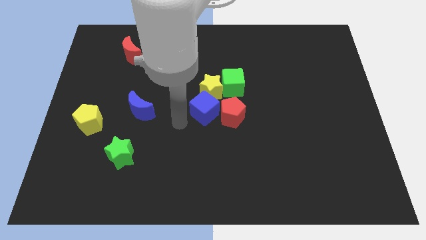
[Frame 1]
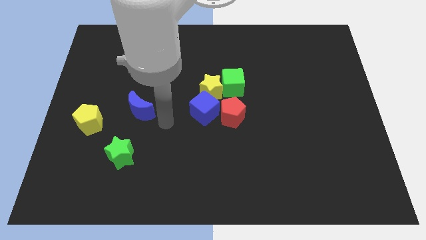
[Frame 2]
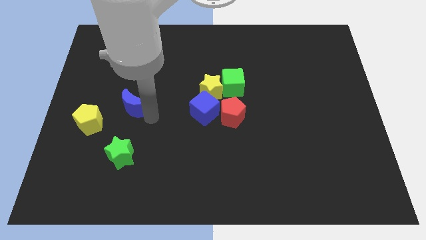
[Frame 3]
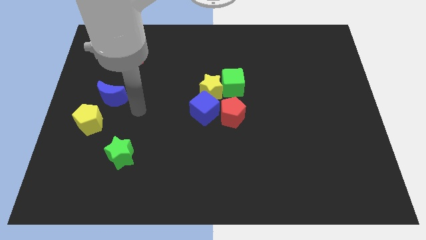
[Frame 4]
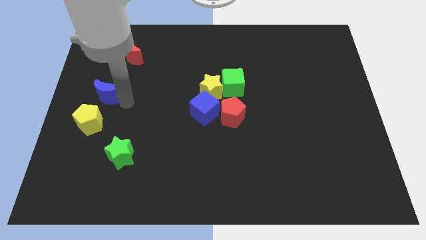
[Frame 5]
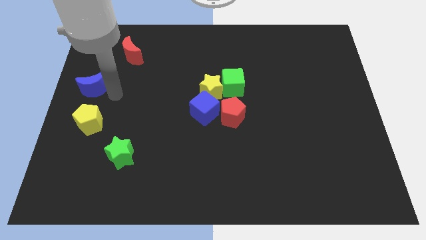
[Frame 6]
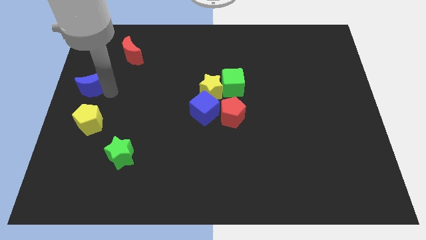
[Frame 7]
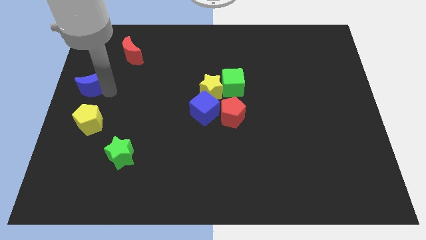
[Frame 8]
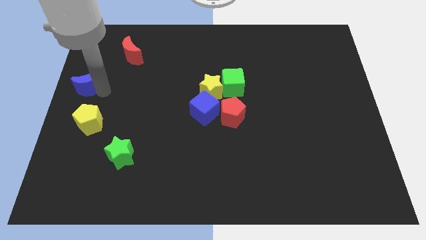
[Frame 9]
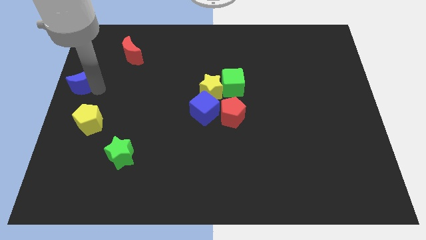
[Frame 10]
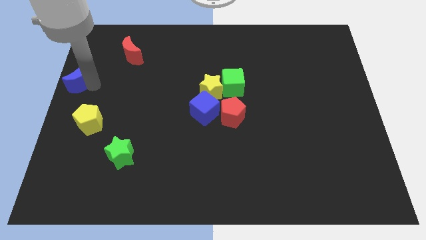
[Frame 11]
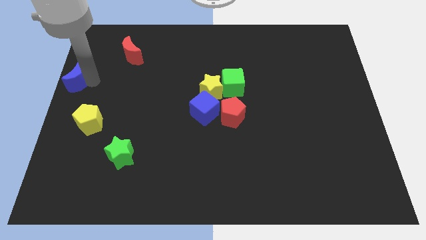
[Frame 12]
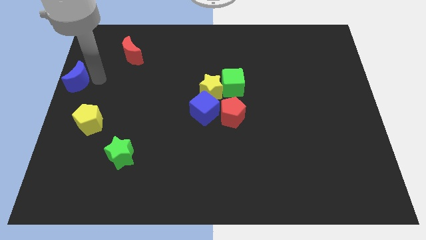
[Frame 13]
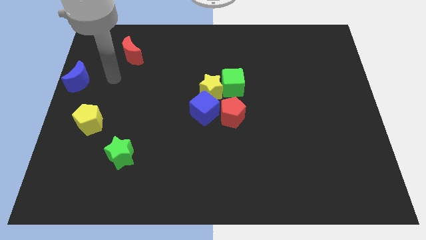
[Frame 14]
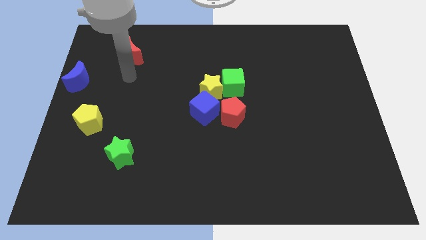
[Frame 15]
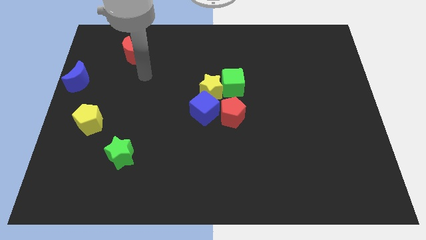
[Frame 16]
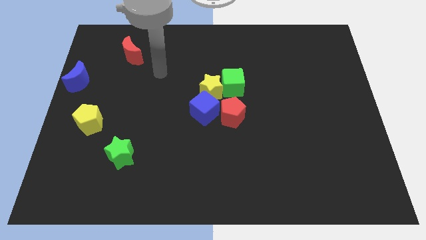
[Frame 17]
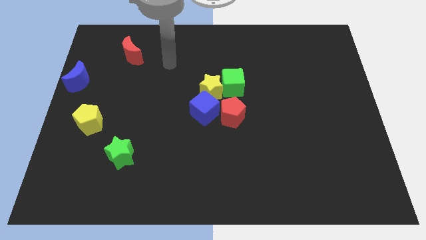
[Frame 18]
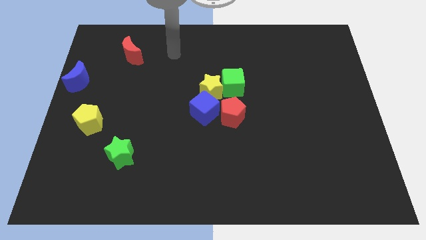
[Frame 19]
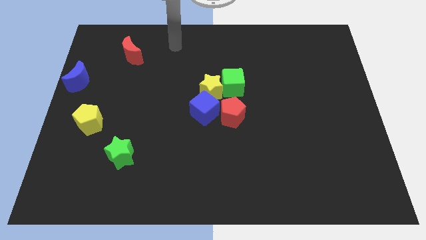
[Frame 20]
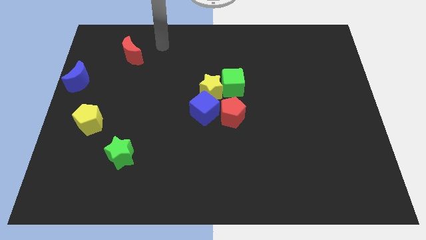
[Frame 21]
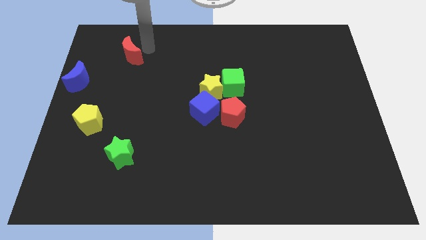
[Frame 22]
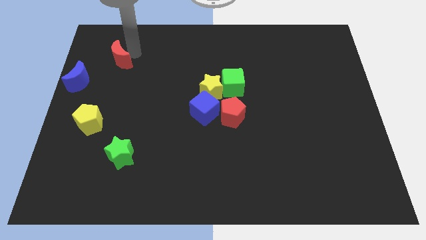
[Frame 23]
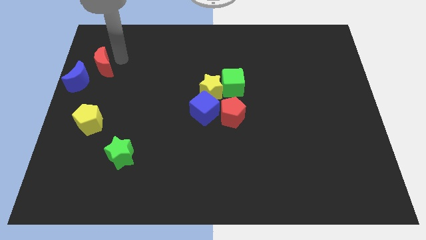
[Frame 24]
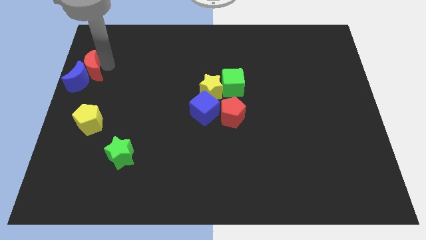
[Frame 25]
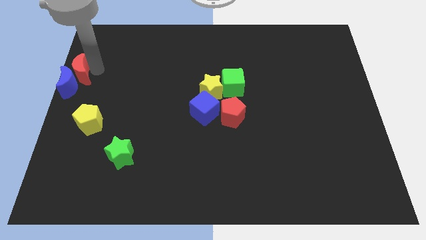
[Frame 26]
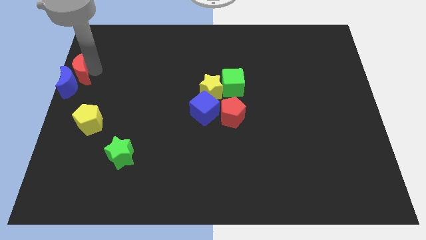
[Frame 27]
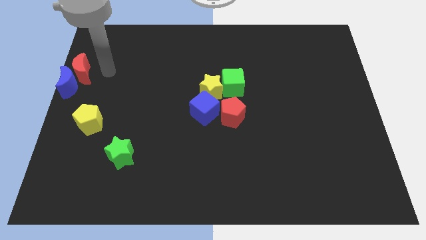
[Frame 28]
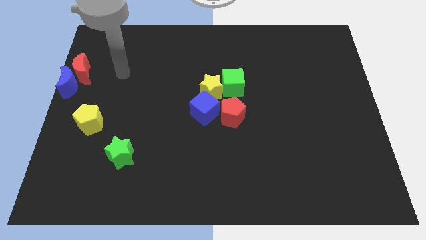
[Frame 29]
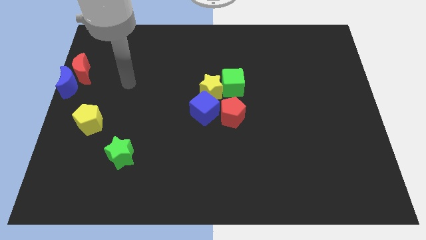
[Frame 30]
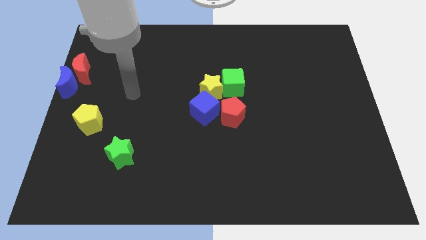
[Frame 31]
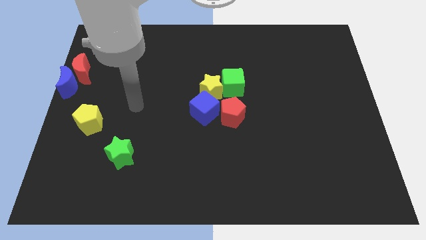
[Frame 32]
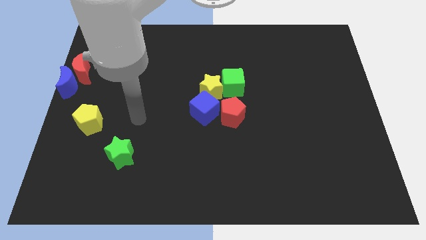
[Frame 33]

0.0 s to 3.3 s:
move the blue crescent along with red crescent to the center left of the board

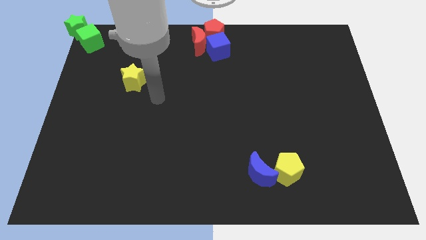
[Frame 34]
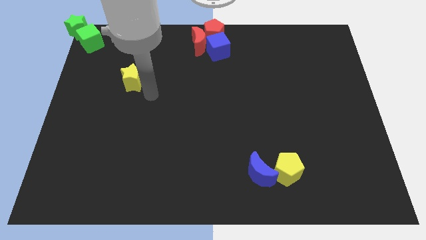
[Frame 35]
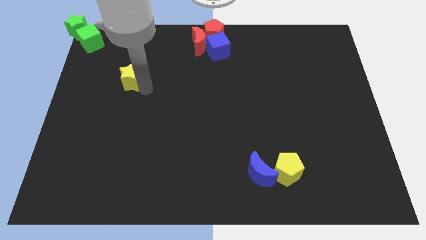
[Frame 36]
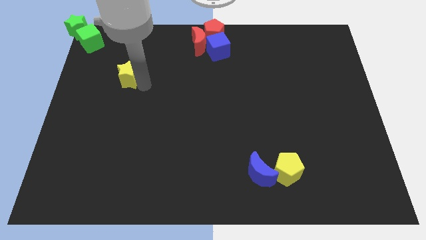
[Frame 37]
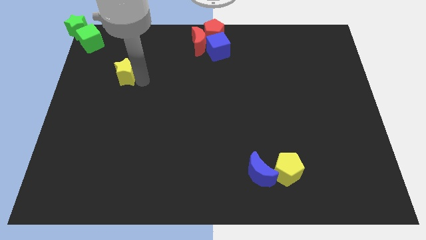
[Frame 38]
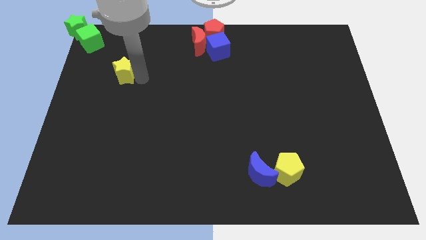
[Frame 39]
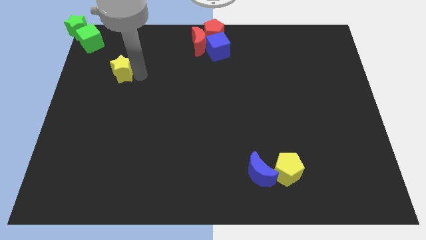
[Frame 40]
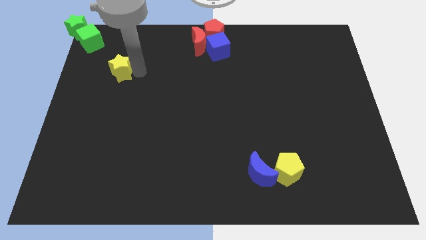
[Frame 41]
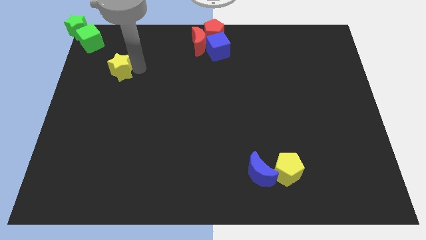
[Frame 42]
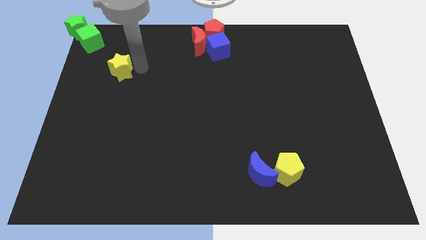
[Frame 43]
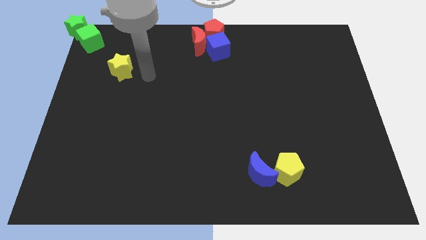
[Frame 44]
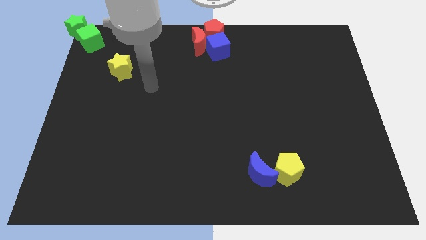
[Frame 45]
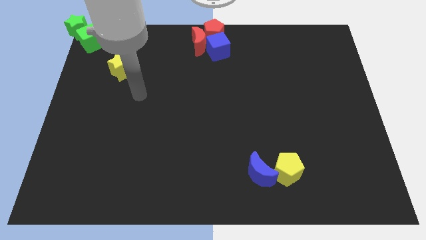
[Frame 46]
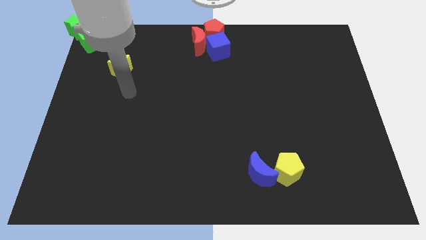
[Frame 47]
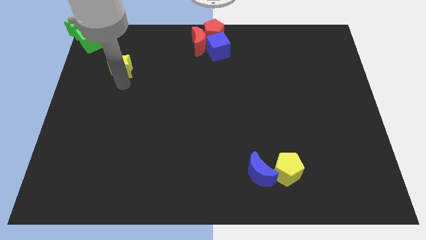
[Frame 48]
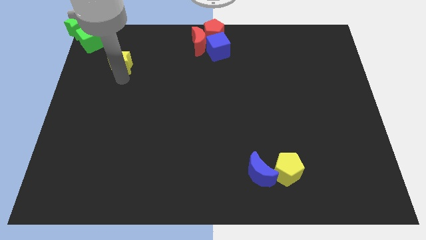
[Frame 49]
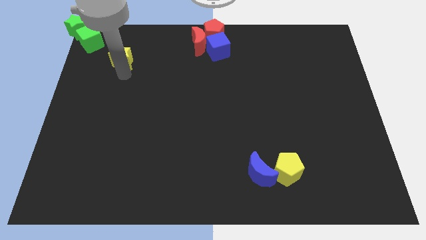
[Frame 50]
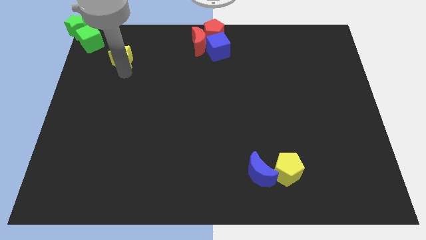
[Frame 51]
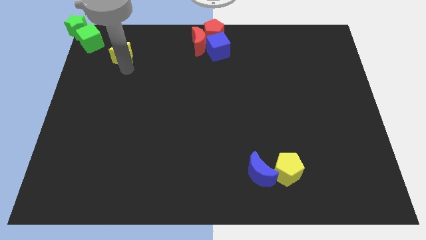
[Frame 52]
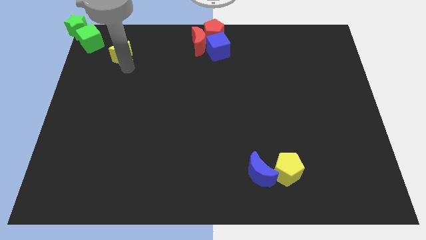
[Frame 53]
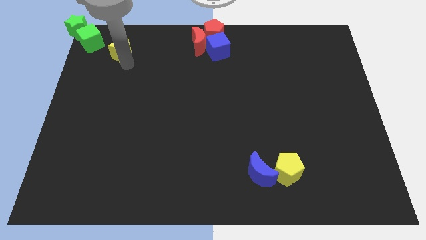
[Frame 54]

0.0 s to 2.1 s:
move the yellow star towards the green cube

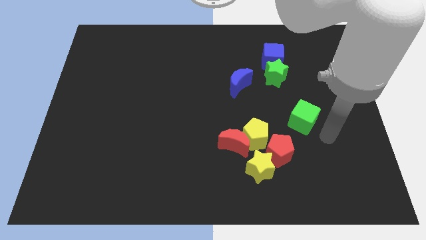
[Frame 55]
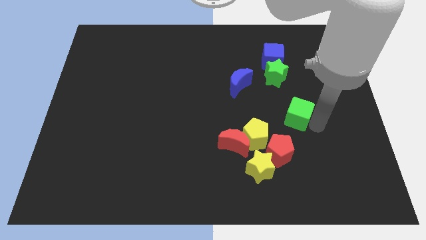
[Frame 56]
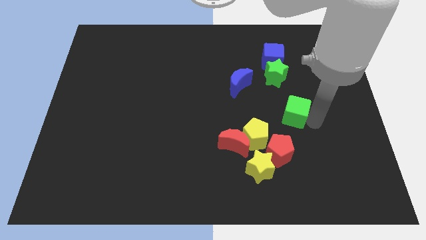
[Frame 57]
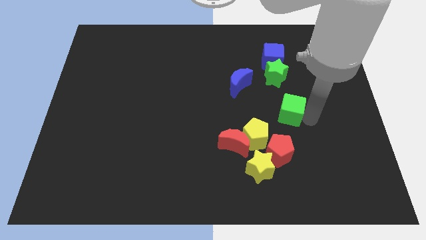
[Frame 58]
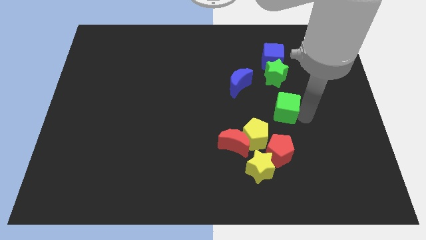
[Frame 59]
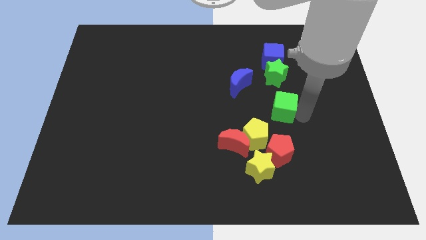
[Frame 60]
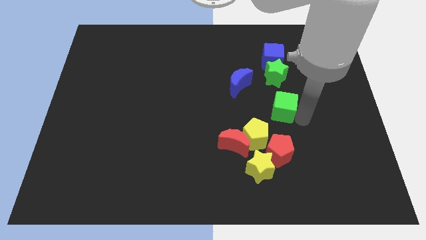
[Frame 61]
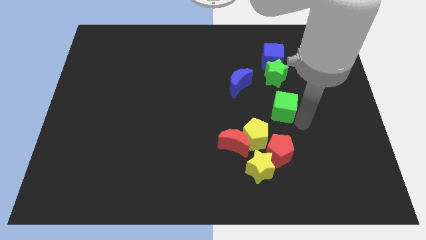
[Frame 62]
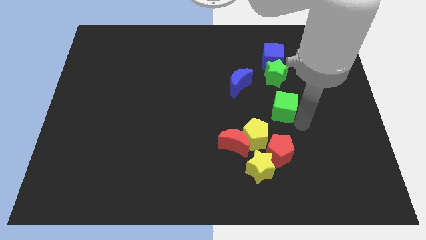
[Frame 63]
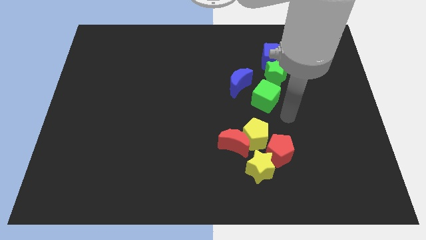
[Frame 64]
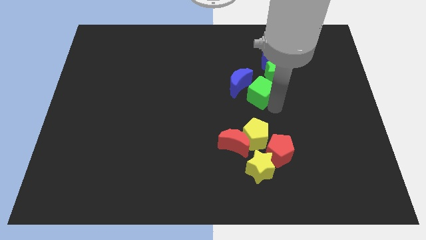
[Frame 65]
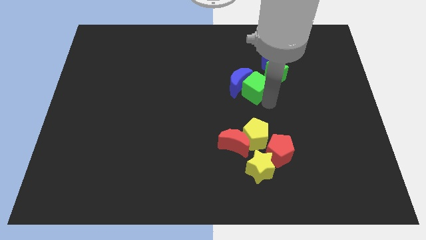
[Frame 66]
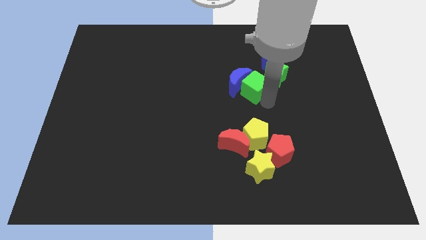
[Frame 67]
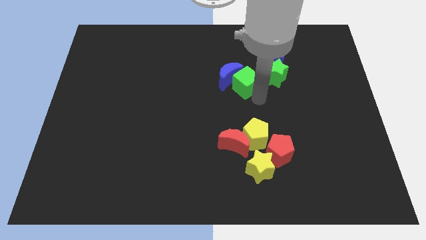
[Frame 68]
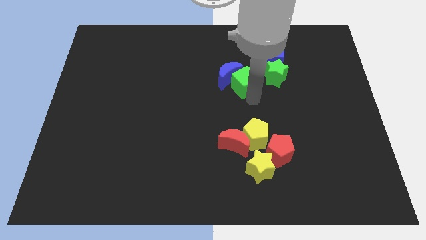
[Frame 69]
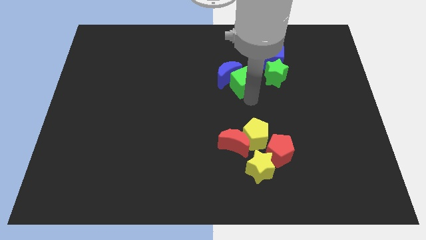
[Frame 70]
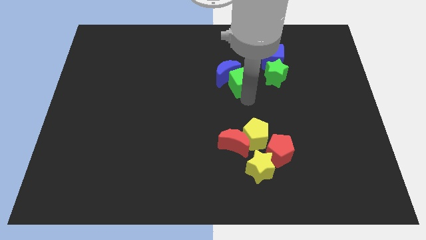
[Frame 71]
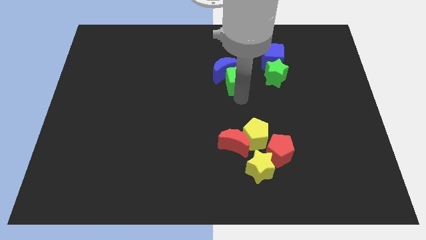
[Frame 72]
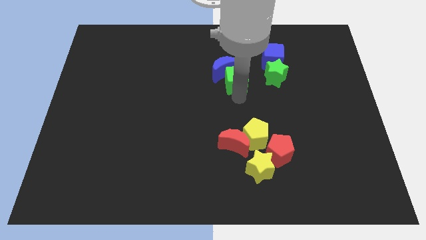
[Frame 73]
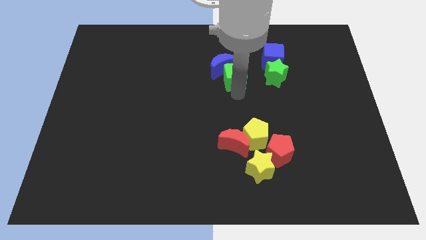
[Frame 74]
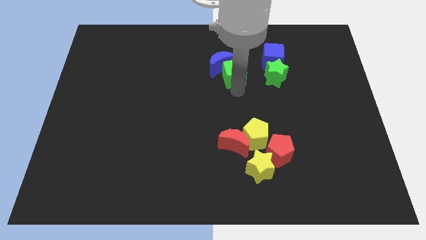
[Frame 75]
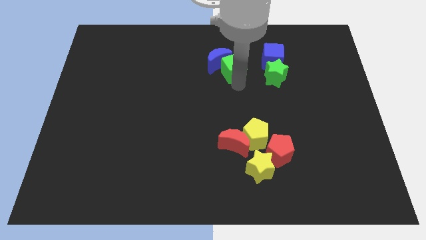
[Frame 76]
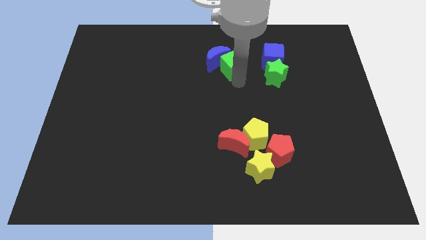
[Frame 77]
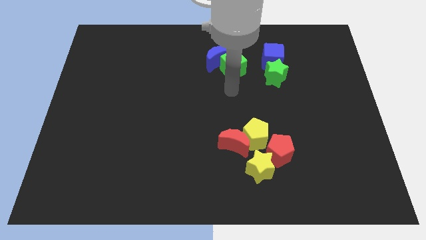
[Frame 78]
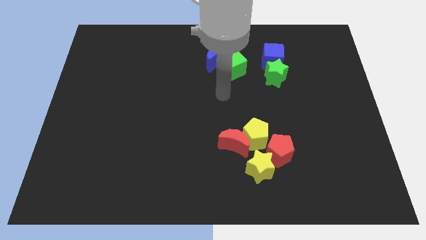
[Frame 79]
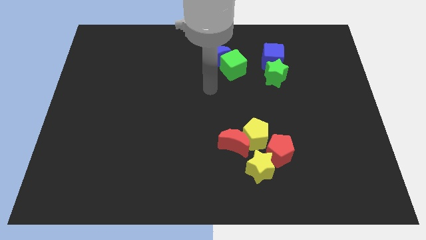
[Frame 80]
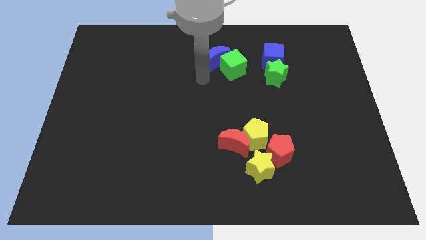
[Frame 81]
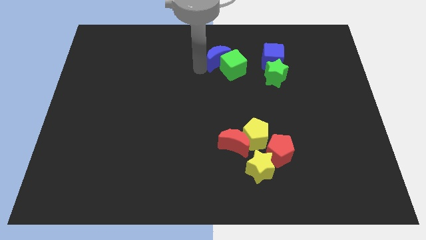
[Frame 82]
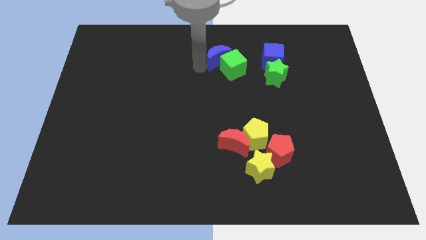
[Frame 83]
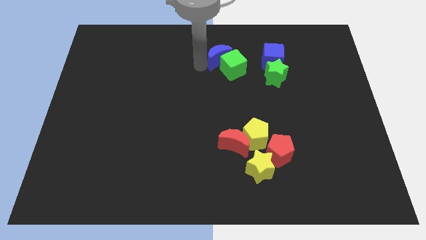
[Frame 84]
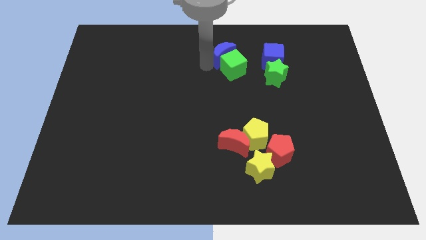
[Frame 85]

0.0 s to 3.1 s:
move the green cube and blue crescent to the left side of the blue cube

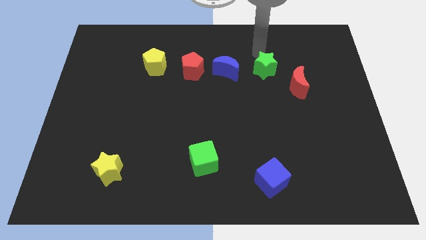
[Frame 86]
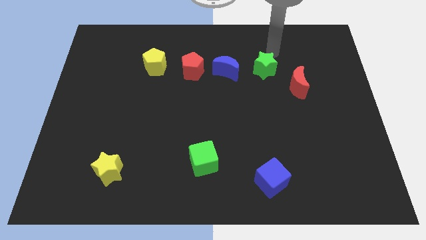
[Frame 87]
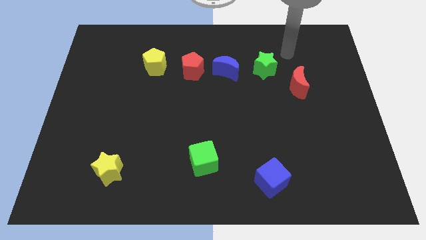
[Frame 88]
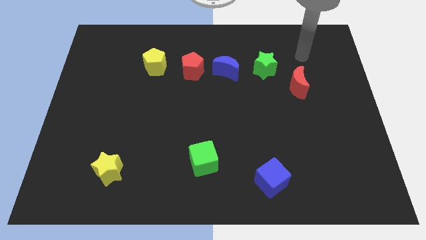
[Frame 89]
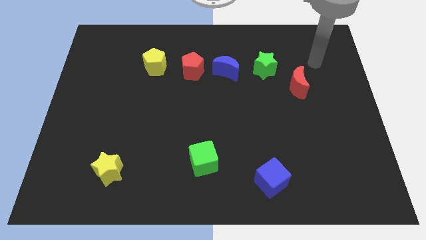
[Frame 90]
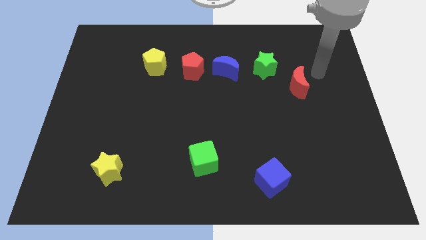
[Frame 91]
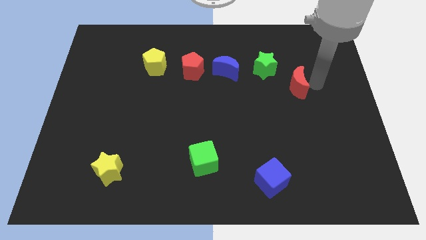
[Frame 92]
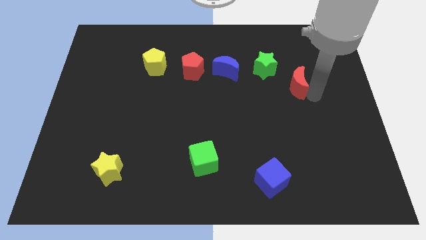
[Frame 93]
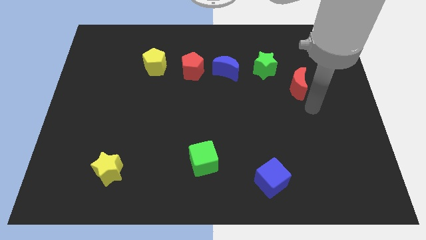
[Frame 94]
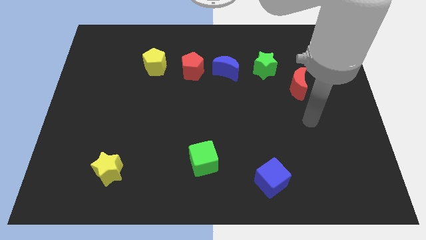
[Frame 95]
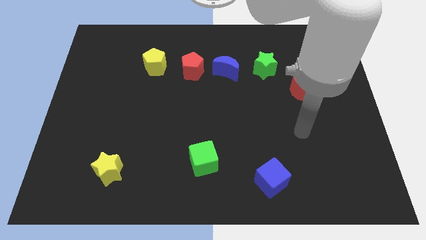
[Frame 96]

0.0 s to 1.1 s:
place arm at the bottom of red crescent
